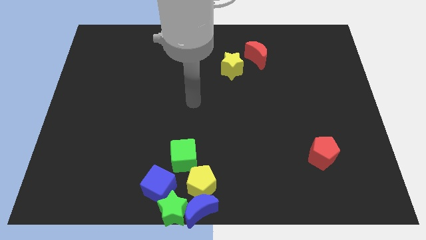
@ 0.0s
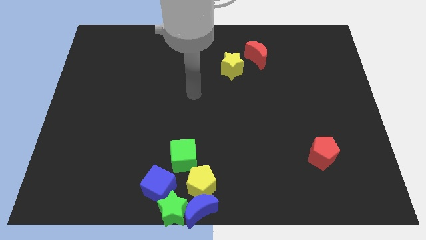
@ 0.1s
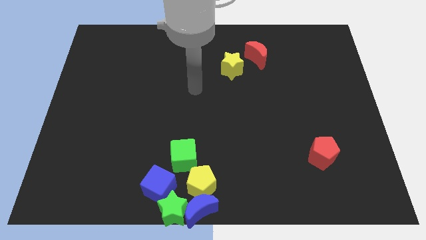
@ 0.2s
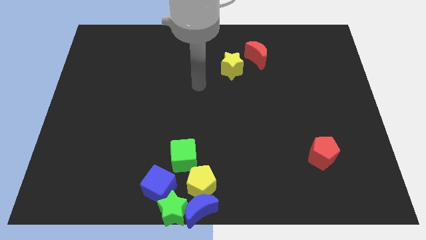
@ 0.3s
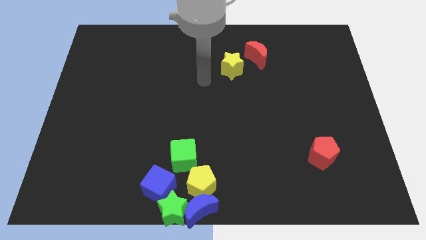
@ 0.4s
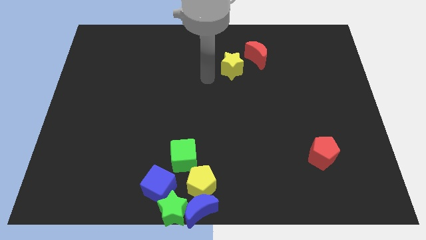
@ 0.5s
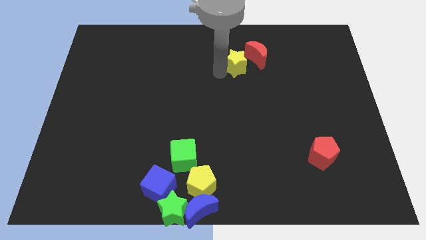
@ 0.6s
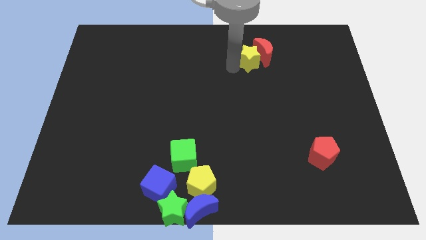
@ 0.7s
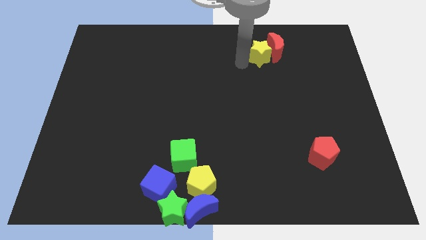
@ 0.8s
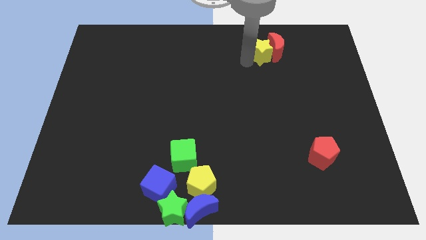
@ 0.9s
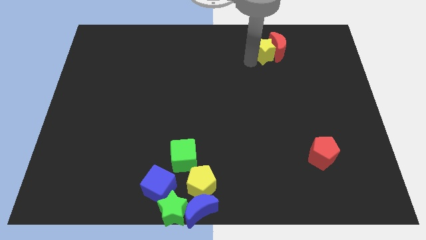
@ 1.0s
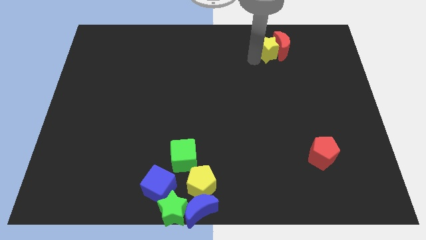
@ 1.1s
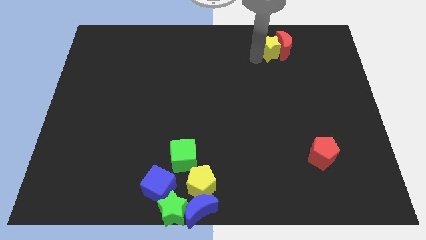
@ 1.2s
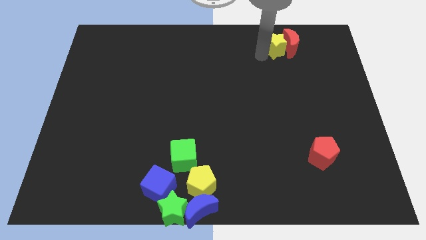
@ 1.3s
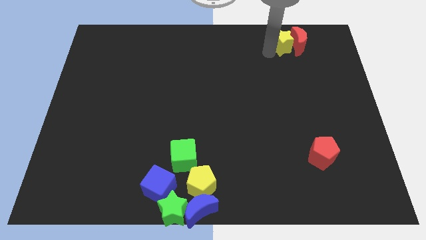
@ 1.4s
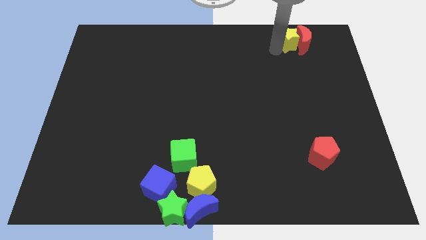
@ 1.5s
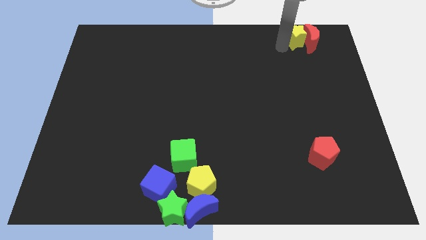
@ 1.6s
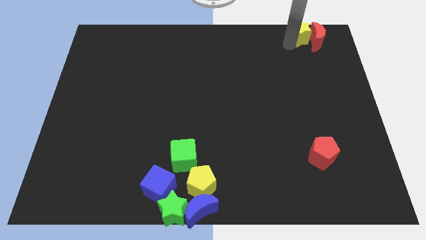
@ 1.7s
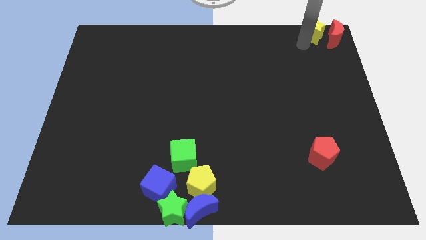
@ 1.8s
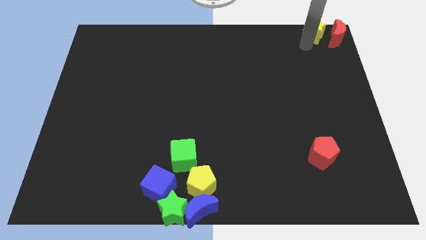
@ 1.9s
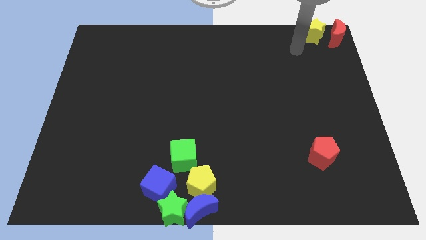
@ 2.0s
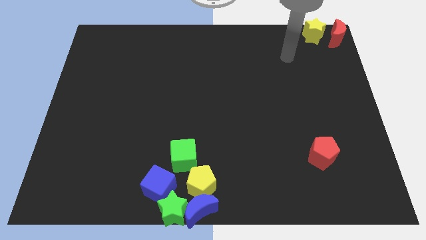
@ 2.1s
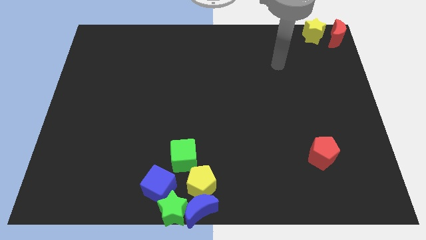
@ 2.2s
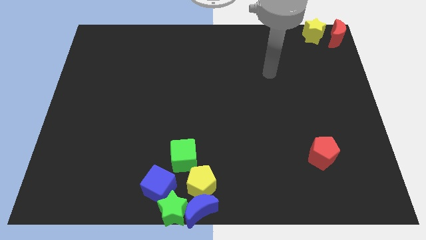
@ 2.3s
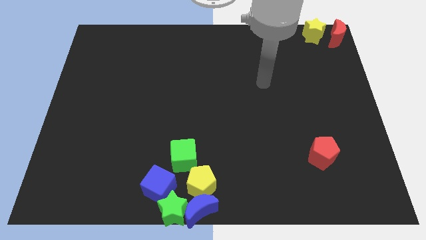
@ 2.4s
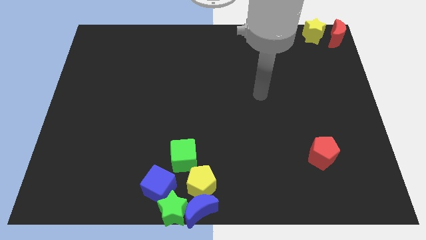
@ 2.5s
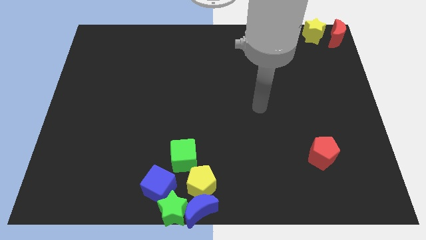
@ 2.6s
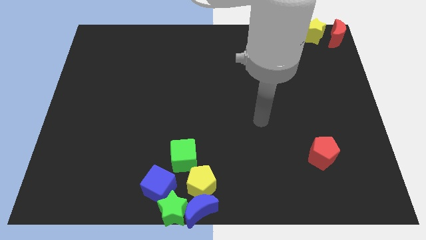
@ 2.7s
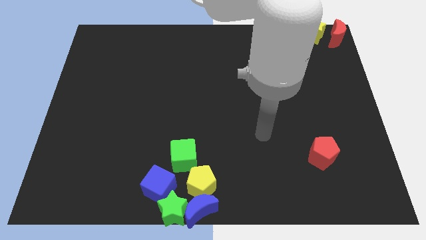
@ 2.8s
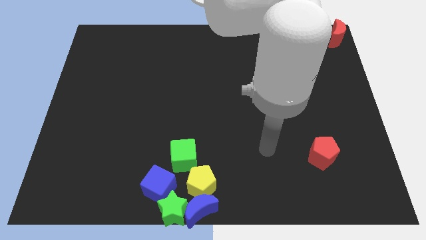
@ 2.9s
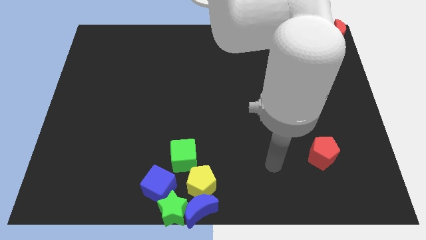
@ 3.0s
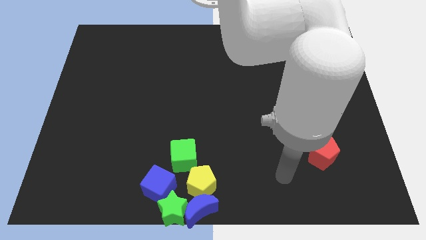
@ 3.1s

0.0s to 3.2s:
move yellow star and red moon to the top right corner

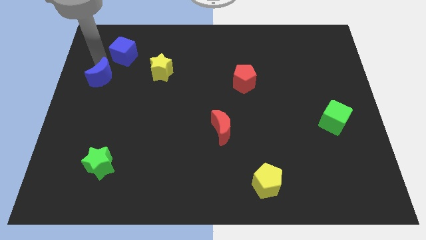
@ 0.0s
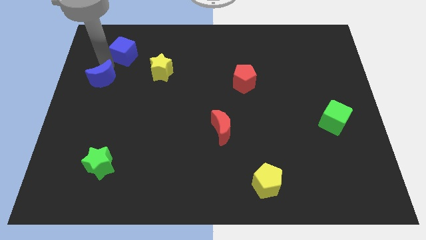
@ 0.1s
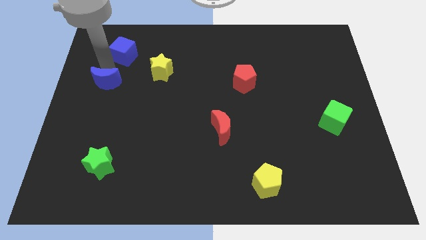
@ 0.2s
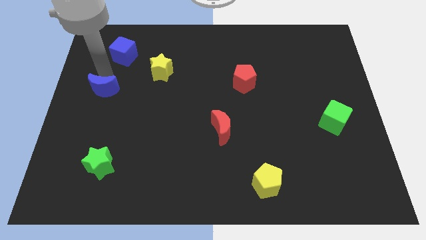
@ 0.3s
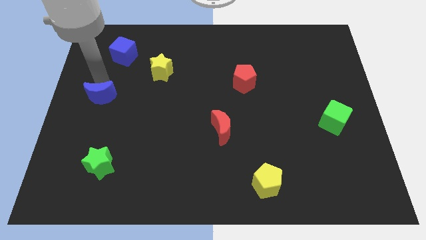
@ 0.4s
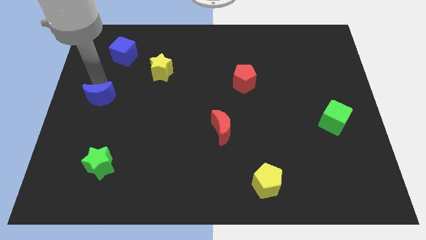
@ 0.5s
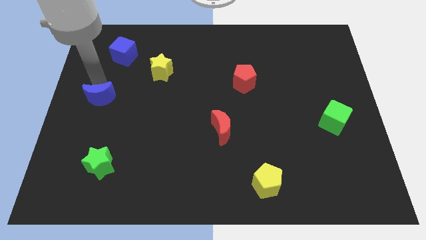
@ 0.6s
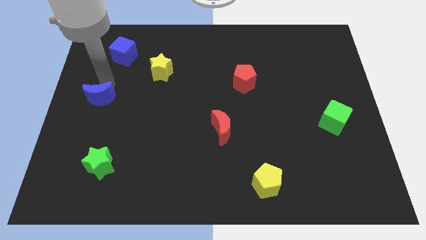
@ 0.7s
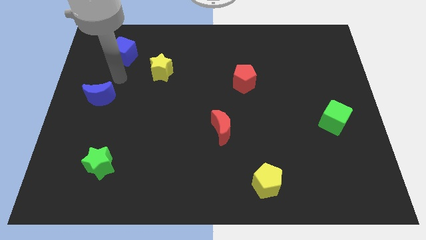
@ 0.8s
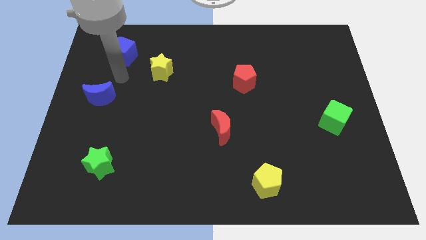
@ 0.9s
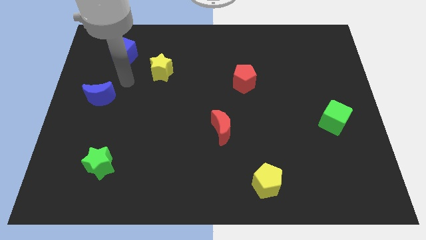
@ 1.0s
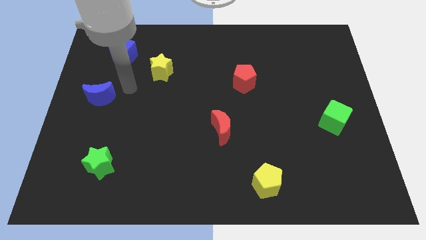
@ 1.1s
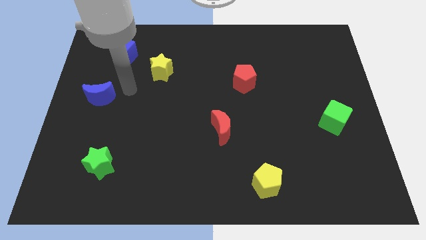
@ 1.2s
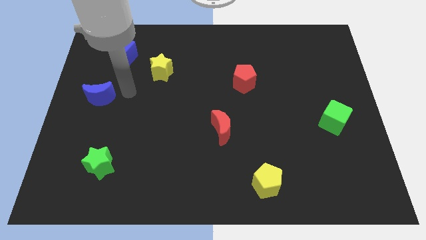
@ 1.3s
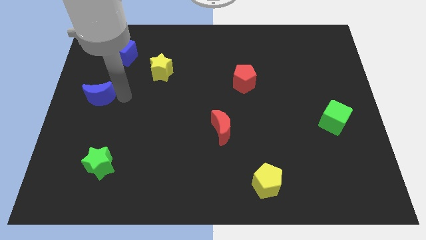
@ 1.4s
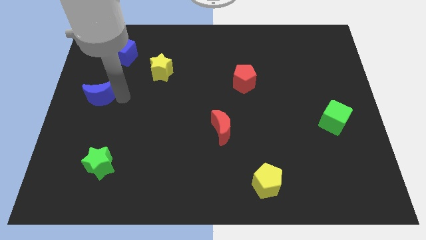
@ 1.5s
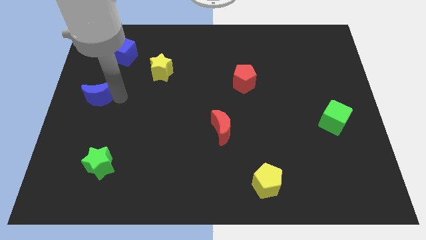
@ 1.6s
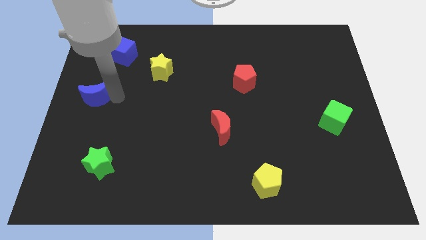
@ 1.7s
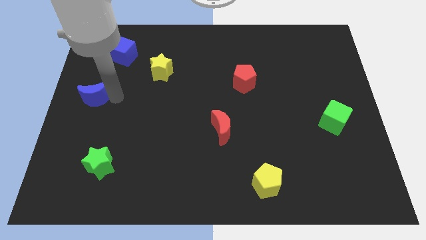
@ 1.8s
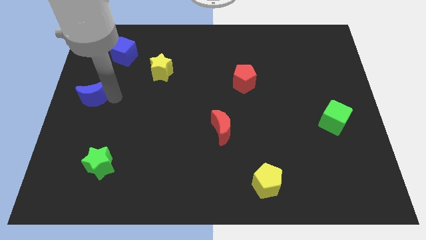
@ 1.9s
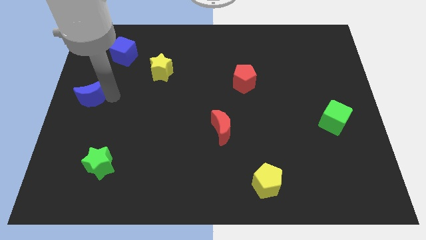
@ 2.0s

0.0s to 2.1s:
slide the blue crescent towards the center left

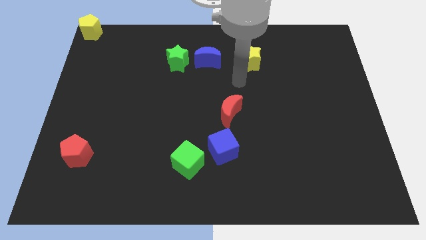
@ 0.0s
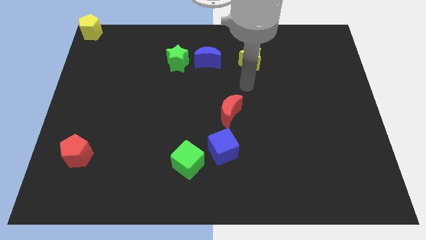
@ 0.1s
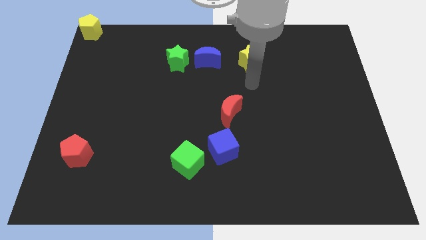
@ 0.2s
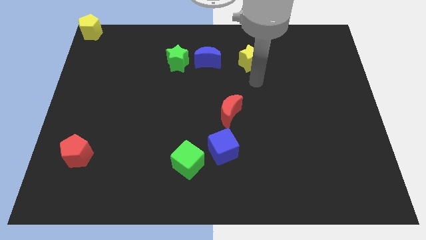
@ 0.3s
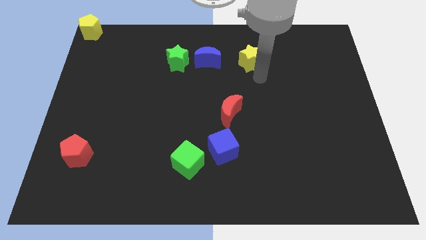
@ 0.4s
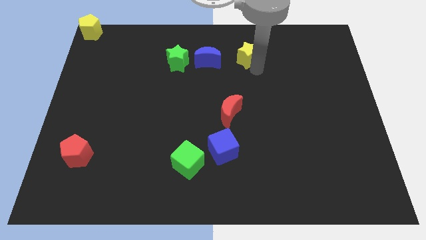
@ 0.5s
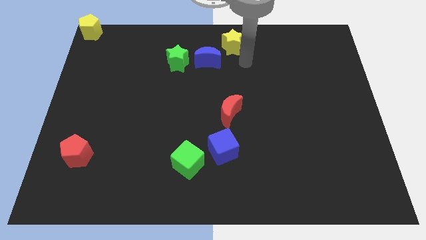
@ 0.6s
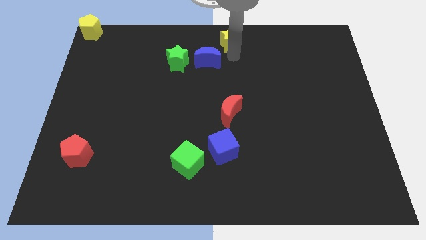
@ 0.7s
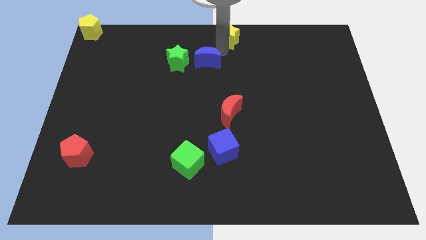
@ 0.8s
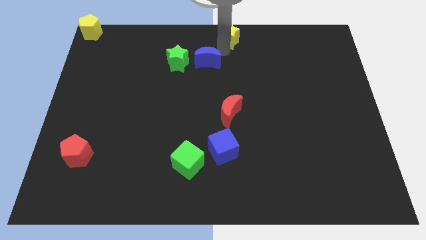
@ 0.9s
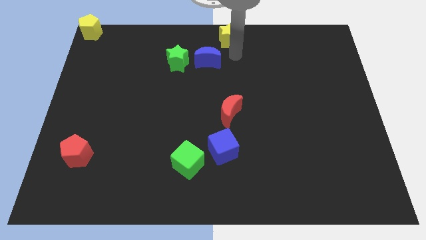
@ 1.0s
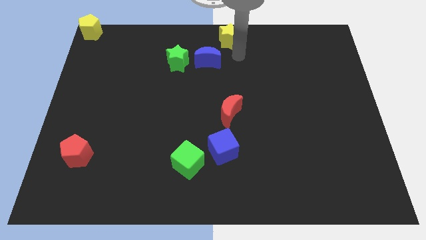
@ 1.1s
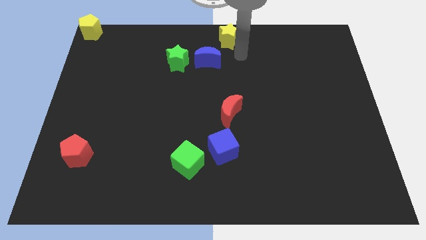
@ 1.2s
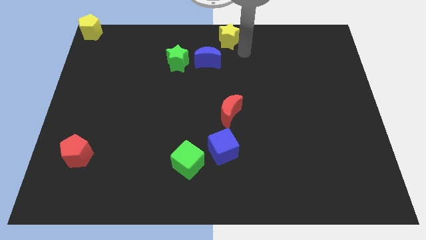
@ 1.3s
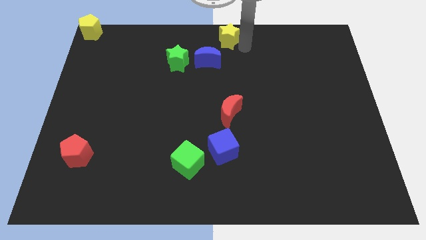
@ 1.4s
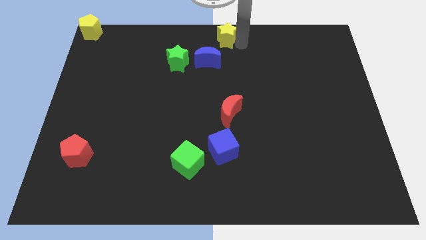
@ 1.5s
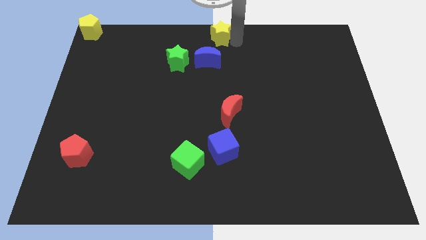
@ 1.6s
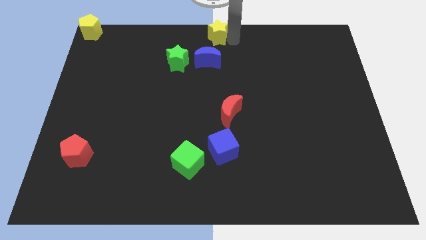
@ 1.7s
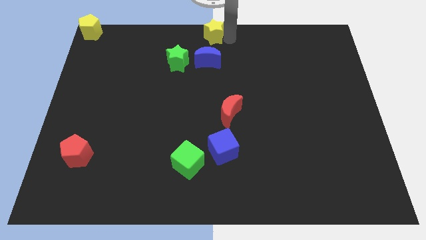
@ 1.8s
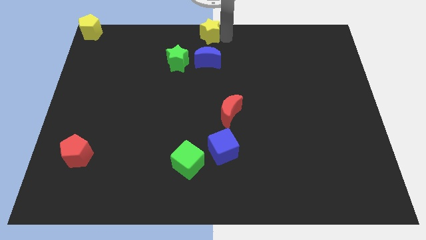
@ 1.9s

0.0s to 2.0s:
move the yellow star to the top center

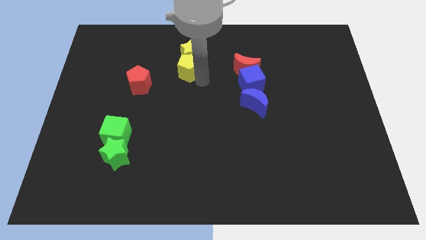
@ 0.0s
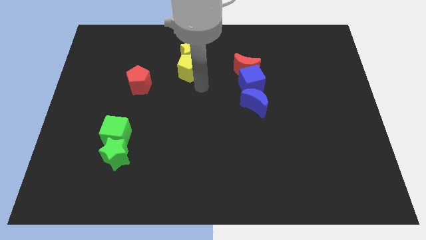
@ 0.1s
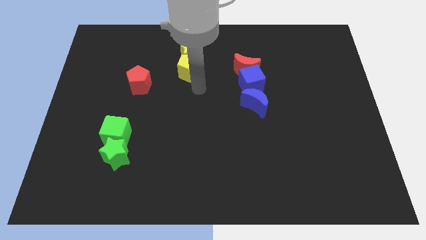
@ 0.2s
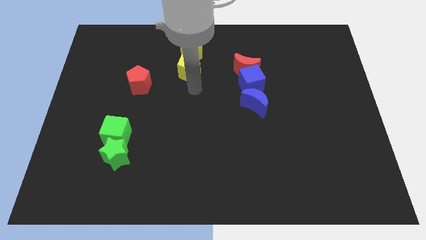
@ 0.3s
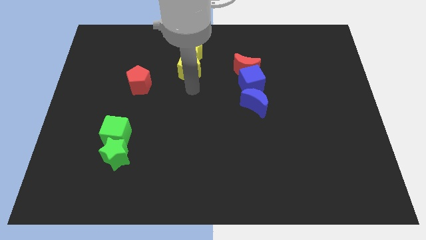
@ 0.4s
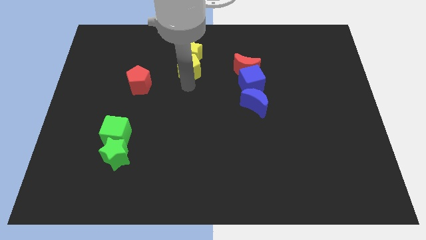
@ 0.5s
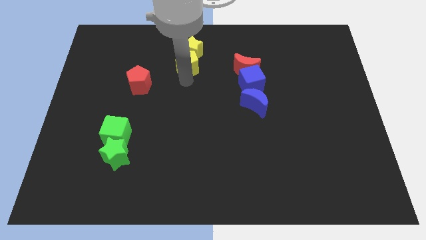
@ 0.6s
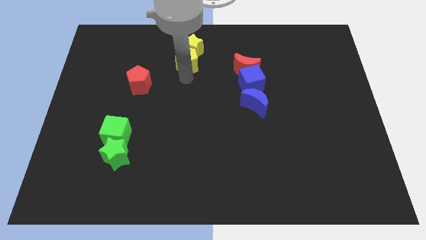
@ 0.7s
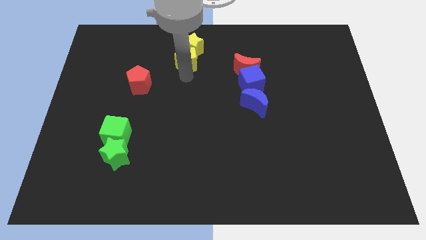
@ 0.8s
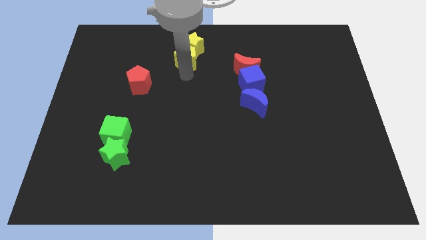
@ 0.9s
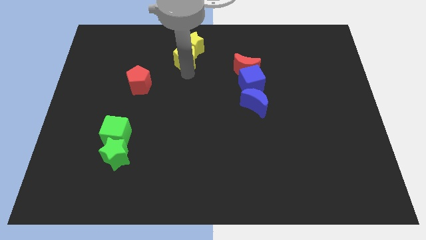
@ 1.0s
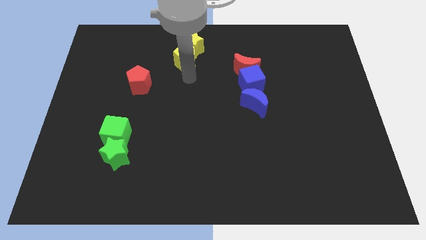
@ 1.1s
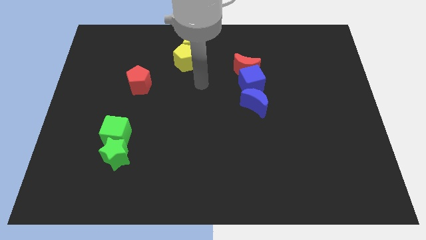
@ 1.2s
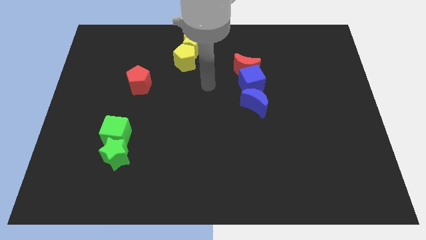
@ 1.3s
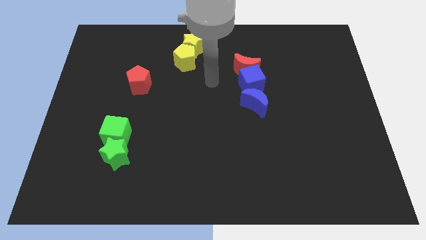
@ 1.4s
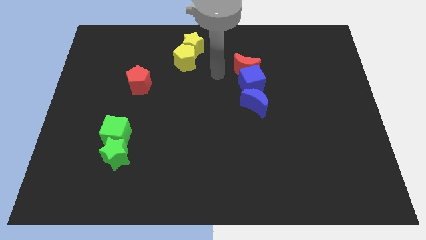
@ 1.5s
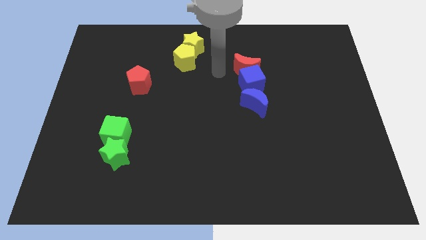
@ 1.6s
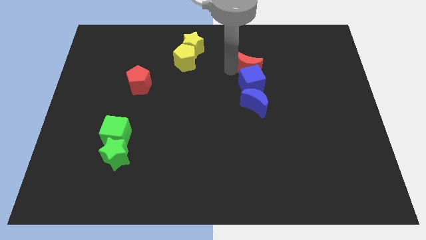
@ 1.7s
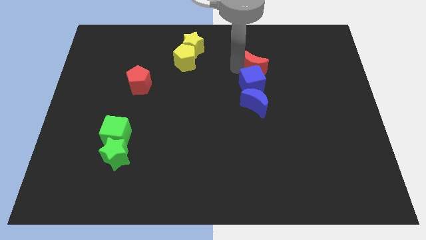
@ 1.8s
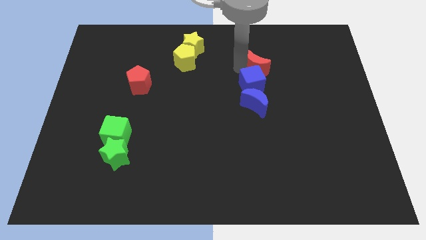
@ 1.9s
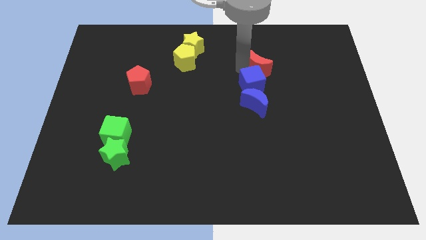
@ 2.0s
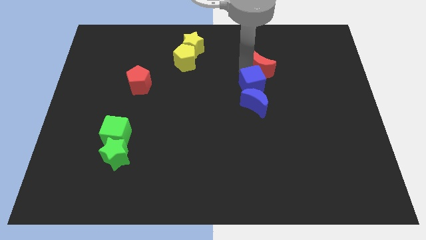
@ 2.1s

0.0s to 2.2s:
move yellow star and yellow pentagon slightly towards up
